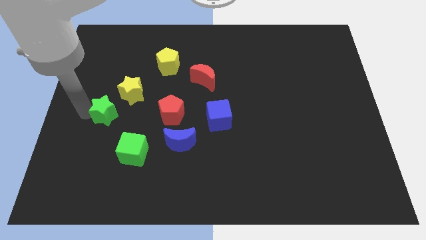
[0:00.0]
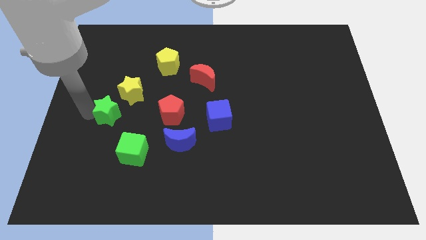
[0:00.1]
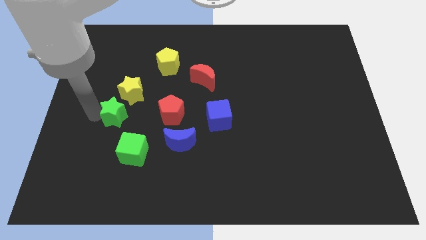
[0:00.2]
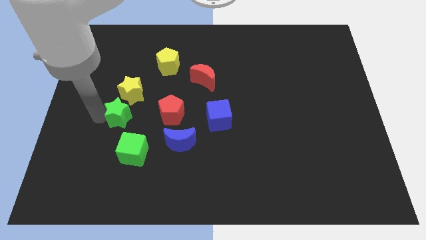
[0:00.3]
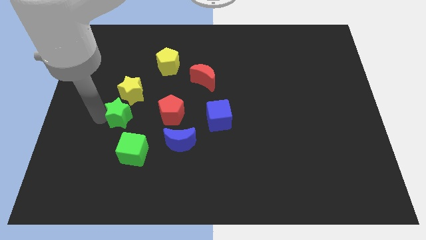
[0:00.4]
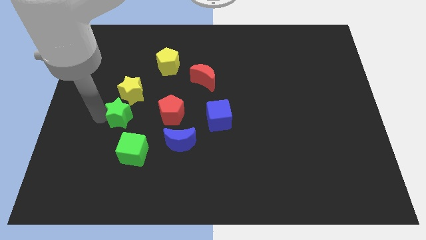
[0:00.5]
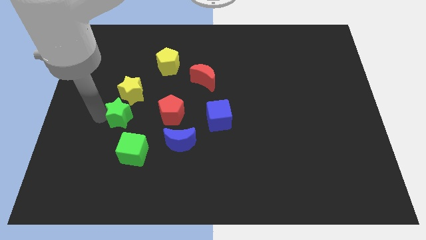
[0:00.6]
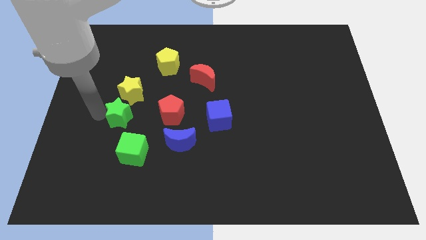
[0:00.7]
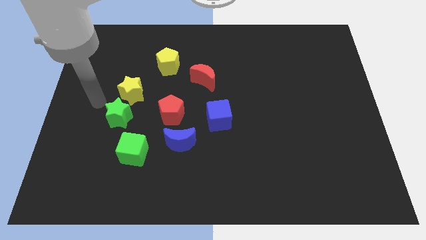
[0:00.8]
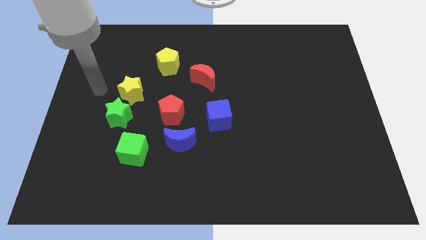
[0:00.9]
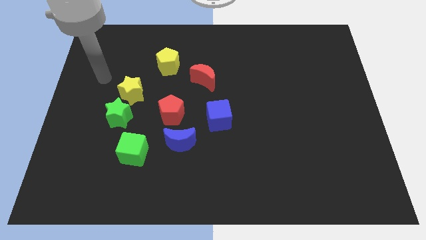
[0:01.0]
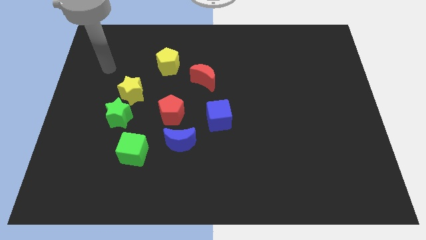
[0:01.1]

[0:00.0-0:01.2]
push the green star below the yellow star

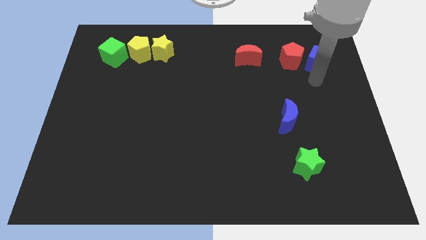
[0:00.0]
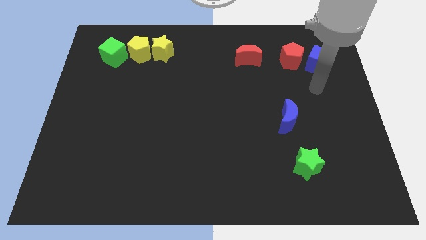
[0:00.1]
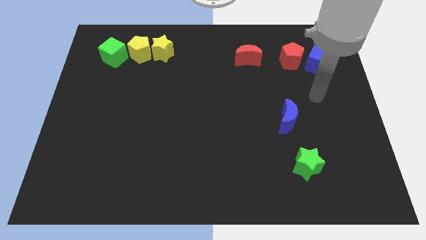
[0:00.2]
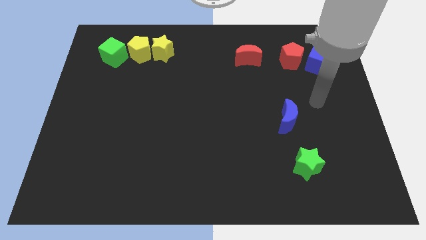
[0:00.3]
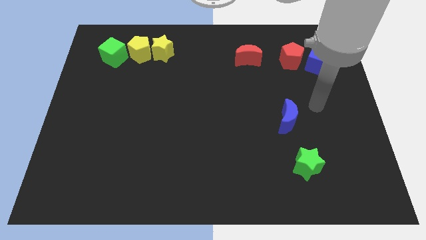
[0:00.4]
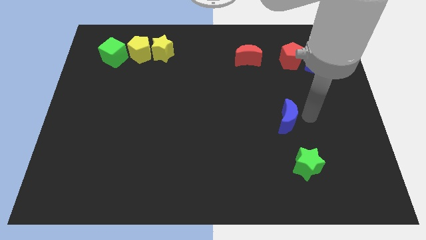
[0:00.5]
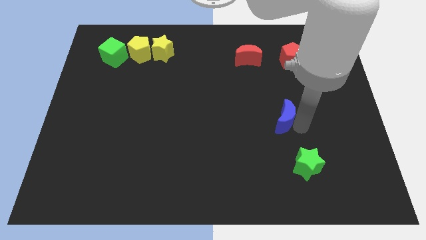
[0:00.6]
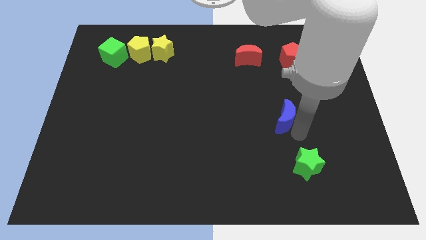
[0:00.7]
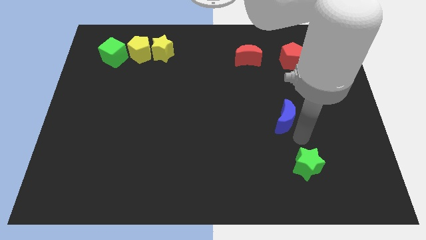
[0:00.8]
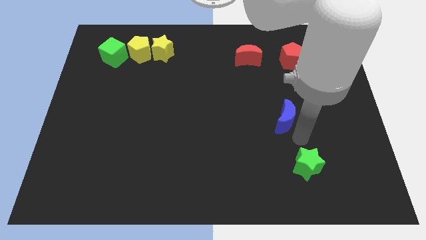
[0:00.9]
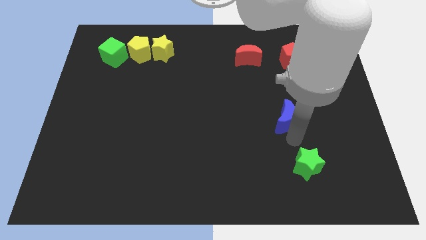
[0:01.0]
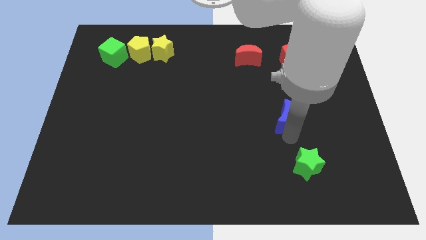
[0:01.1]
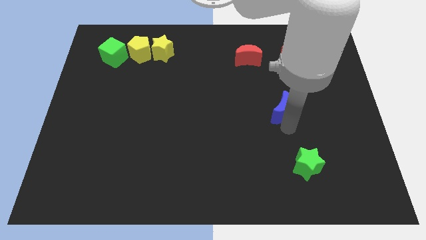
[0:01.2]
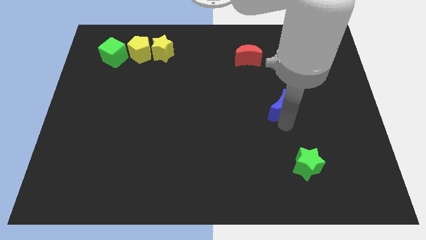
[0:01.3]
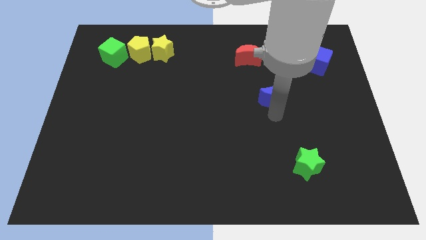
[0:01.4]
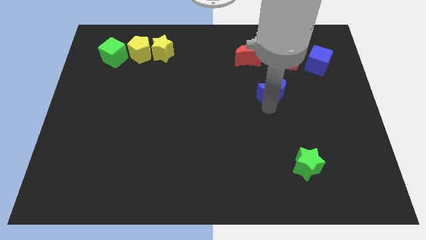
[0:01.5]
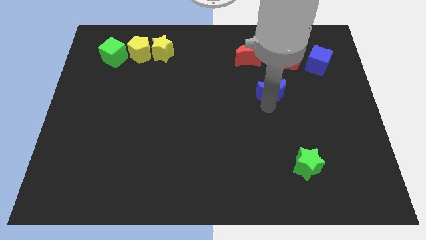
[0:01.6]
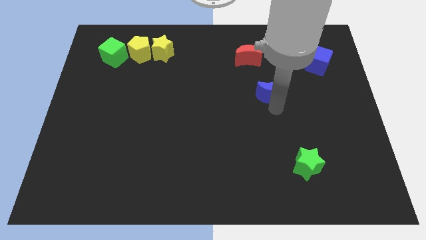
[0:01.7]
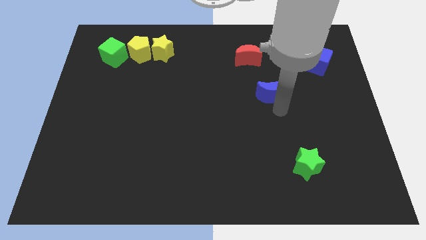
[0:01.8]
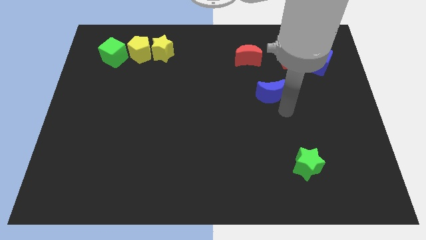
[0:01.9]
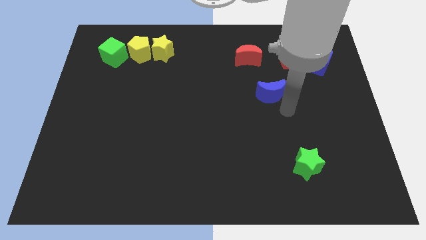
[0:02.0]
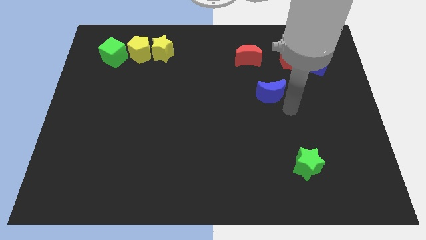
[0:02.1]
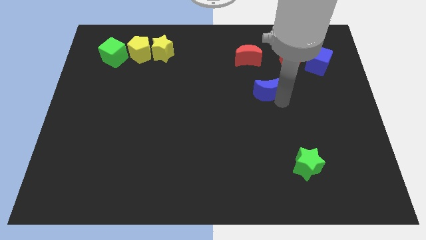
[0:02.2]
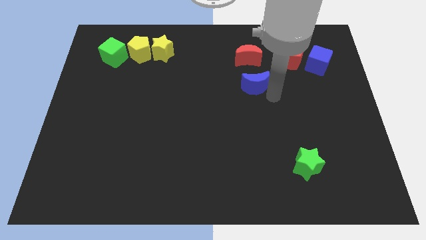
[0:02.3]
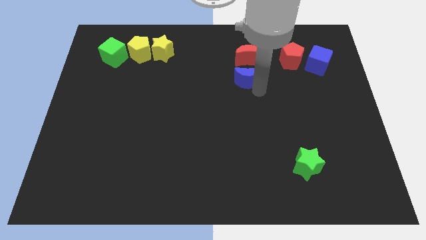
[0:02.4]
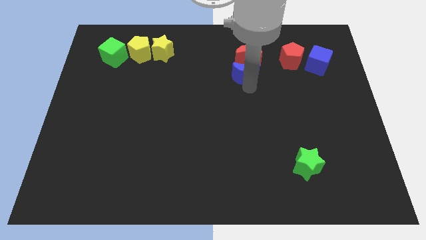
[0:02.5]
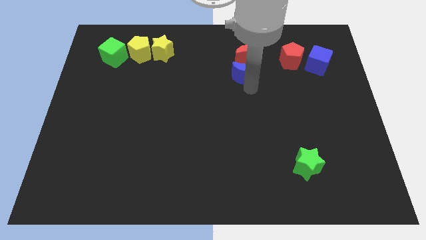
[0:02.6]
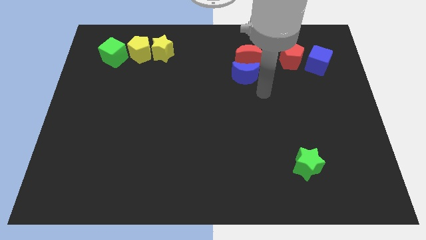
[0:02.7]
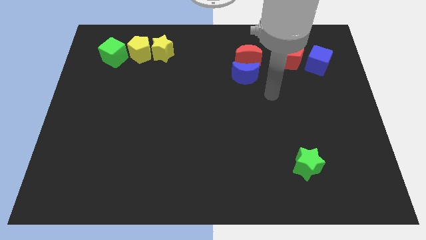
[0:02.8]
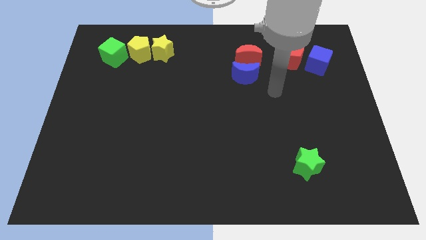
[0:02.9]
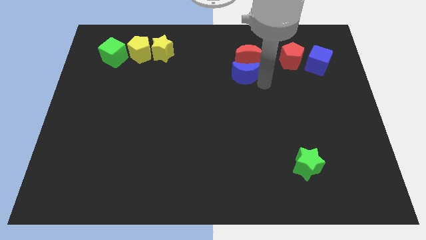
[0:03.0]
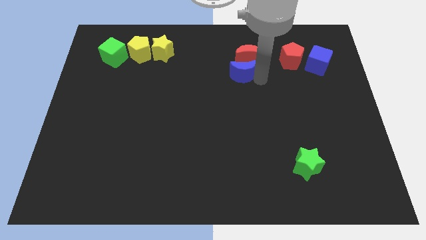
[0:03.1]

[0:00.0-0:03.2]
move the blue crescent to the bottom side of the red crescent

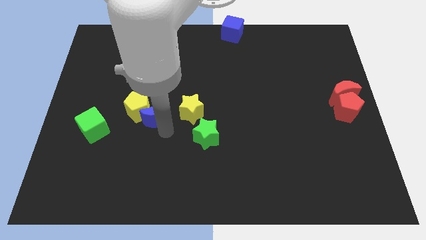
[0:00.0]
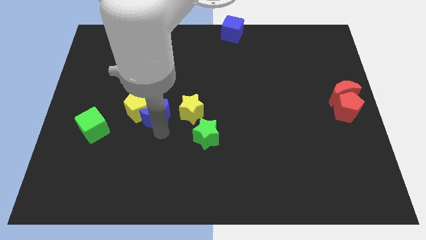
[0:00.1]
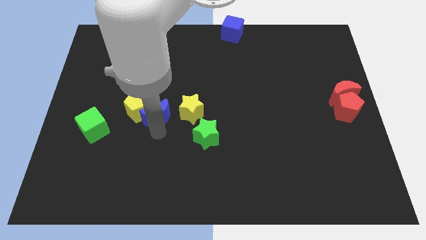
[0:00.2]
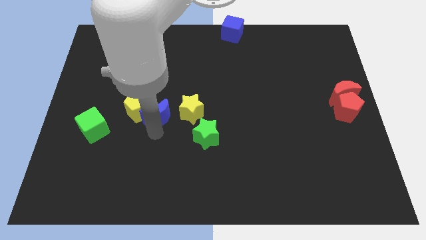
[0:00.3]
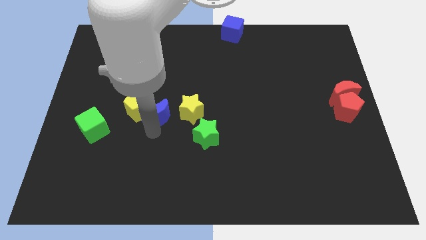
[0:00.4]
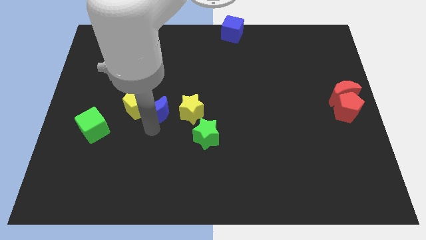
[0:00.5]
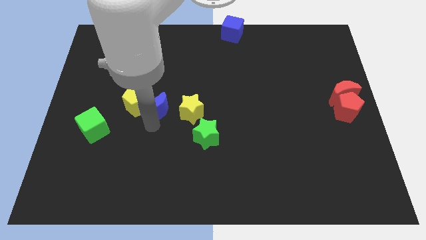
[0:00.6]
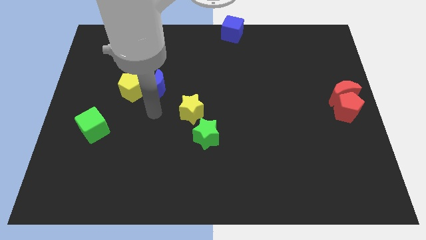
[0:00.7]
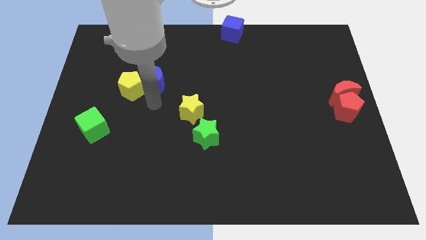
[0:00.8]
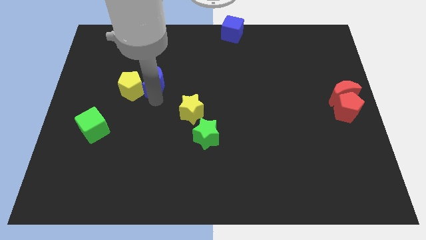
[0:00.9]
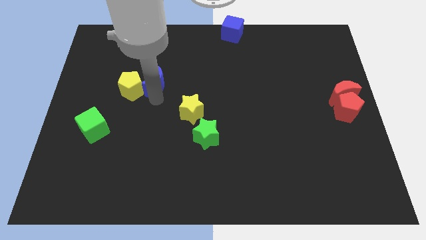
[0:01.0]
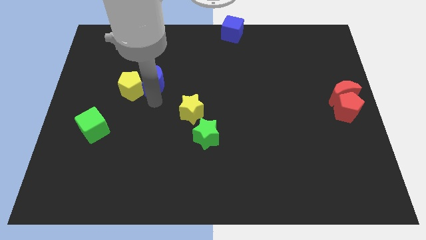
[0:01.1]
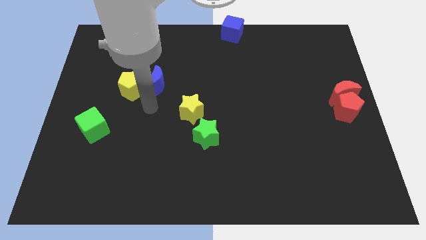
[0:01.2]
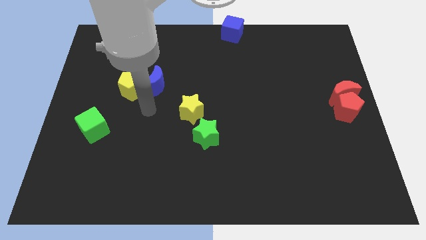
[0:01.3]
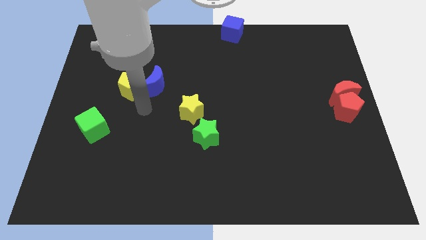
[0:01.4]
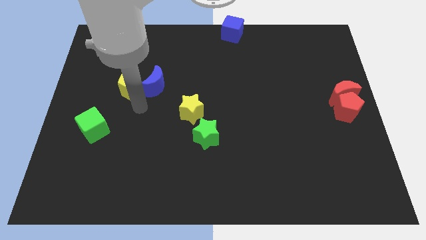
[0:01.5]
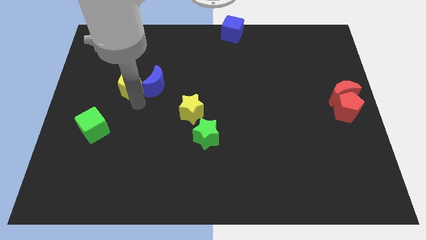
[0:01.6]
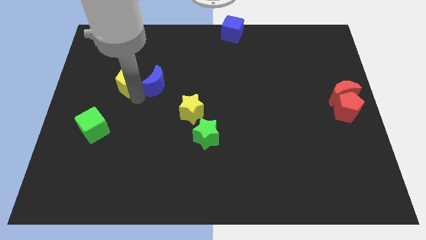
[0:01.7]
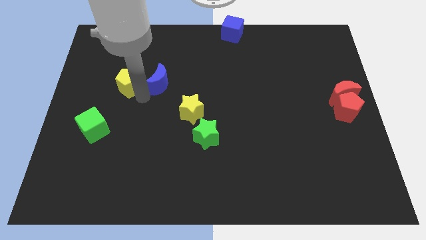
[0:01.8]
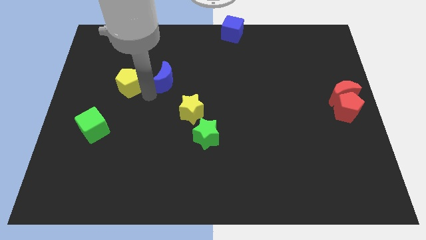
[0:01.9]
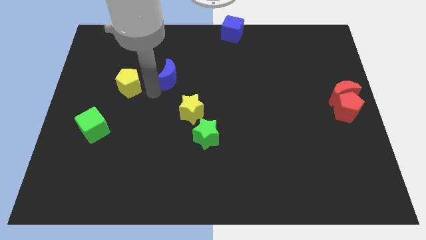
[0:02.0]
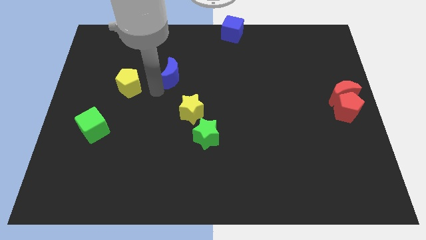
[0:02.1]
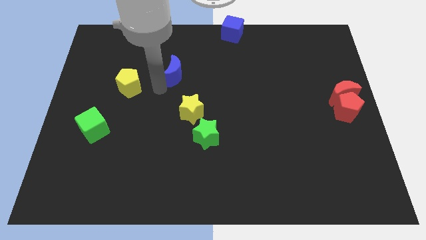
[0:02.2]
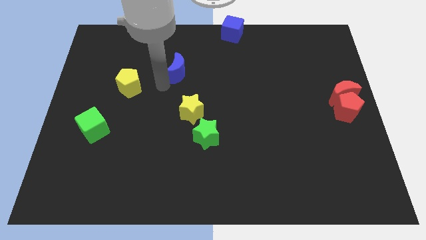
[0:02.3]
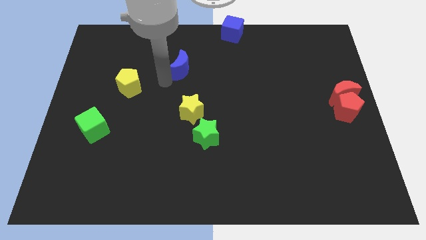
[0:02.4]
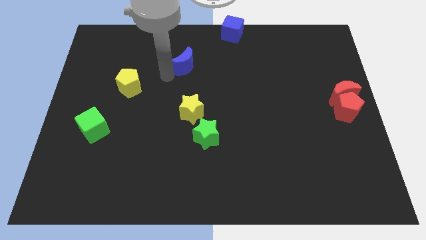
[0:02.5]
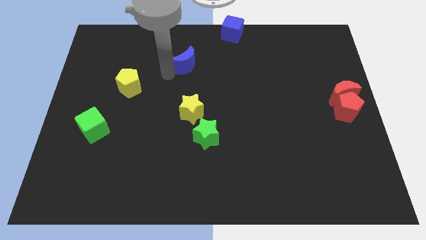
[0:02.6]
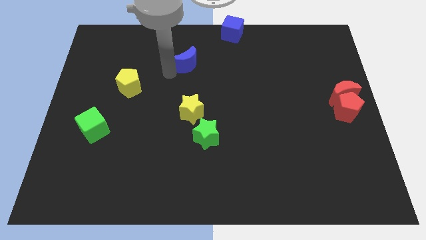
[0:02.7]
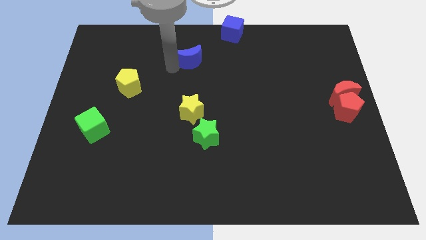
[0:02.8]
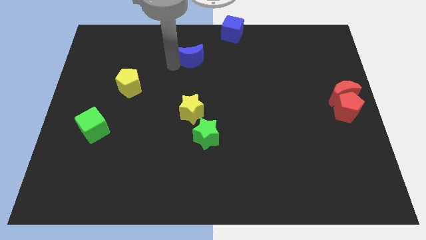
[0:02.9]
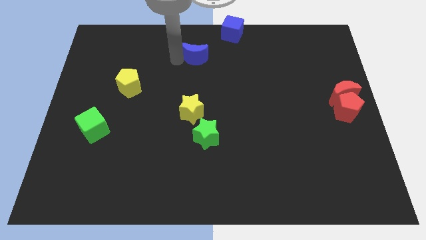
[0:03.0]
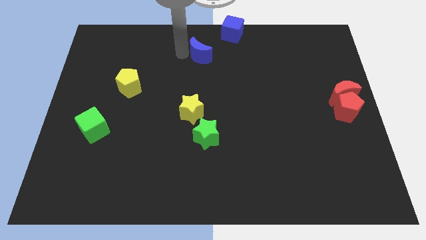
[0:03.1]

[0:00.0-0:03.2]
separate the blue moon from the yellow pentagon

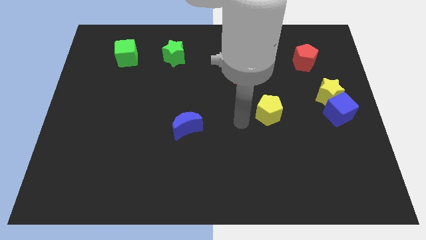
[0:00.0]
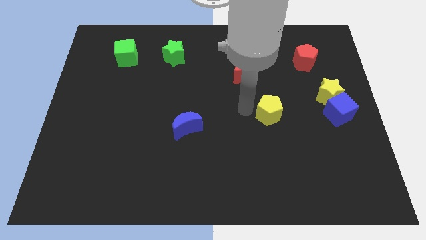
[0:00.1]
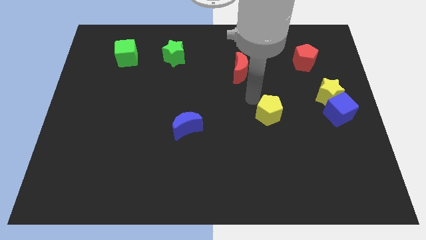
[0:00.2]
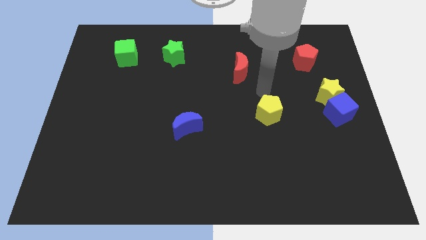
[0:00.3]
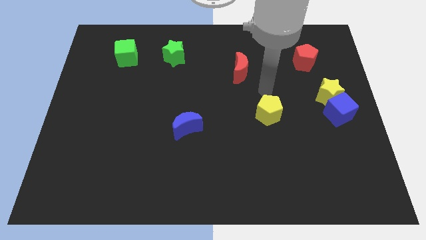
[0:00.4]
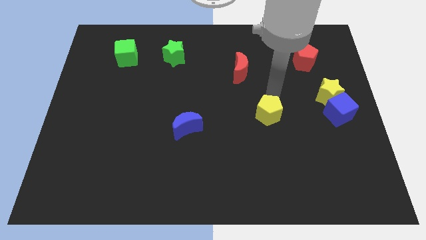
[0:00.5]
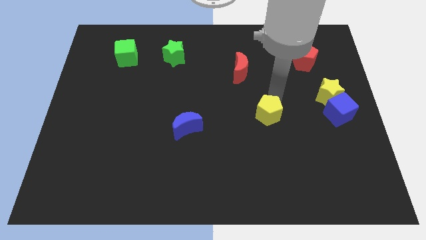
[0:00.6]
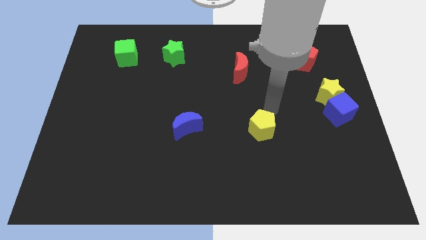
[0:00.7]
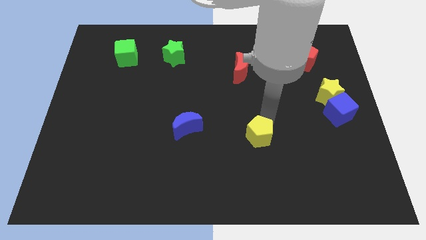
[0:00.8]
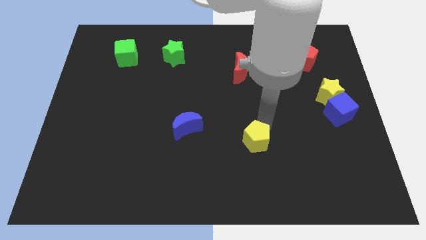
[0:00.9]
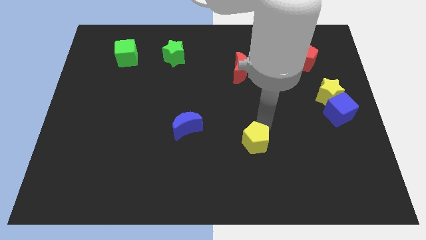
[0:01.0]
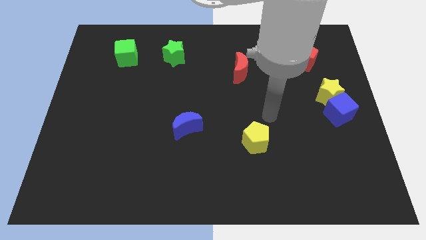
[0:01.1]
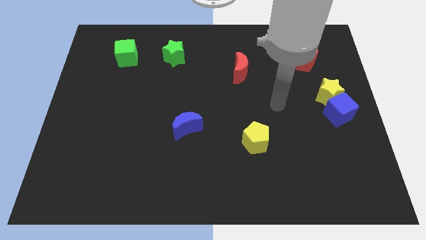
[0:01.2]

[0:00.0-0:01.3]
place the yellow pentagon to the right of the blue moon
